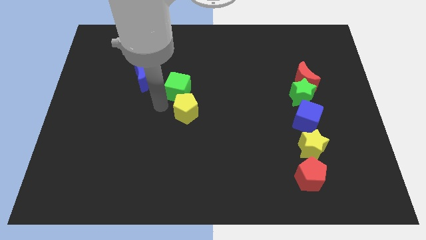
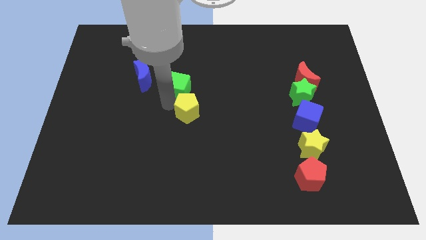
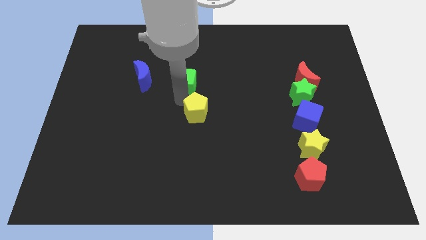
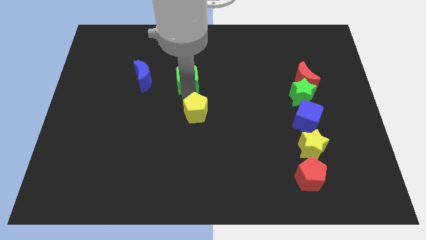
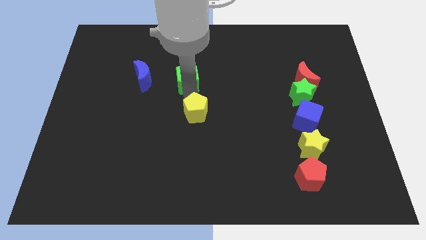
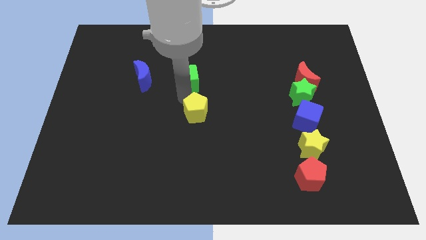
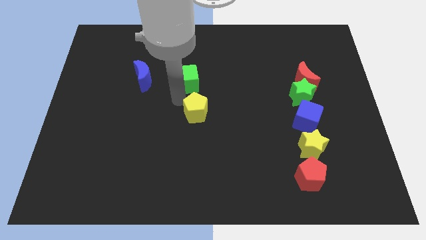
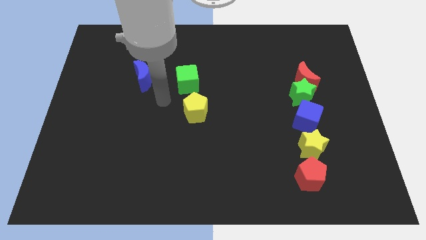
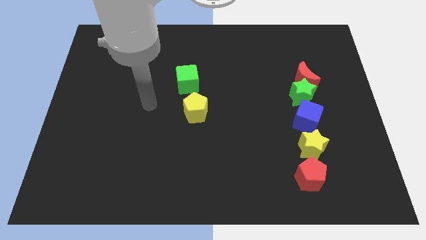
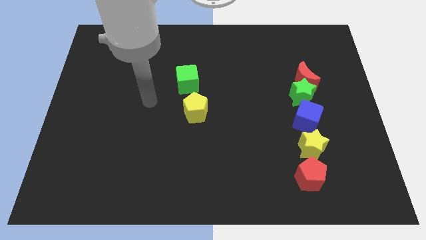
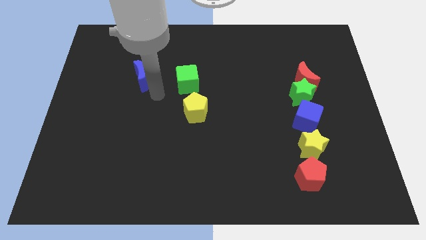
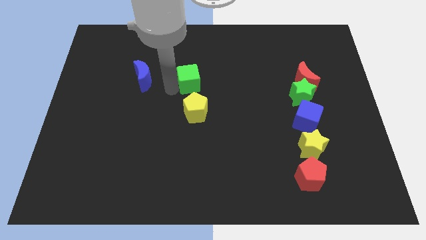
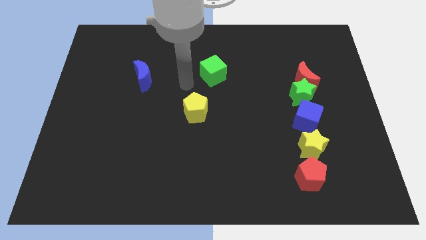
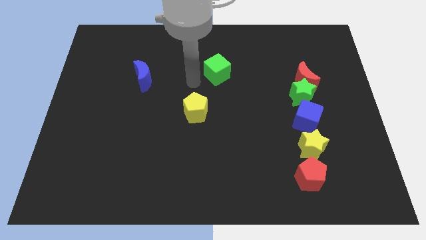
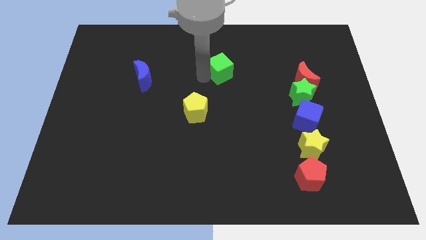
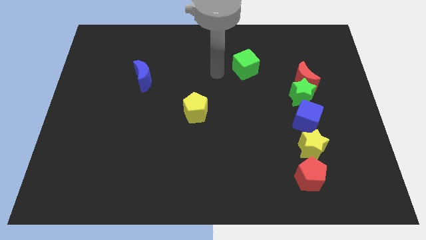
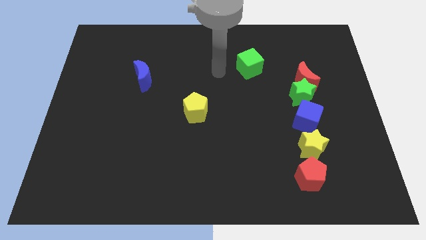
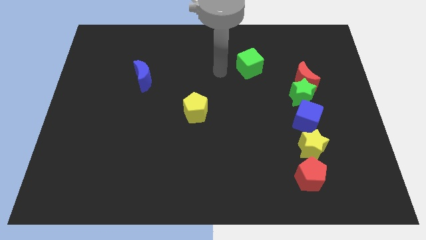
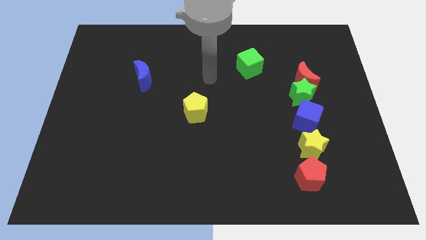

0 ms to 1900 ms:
separate the green cube from the yellow pentagon

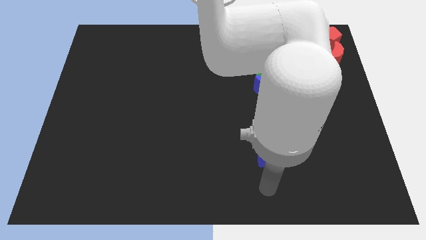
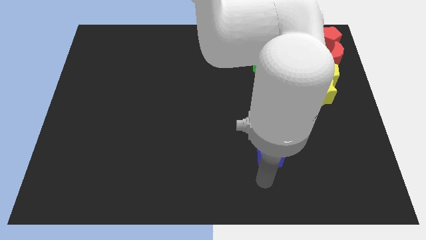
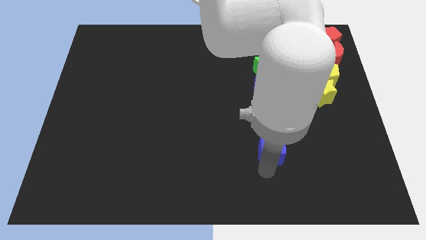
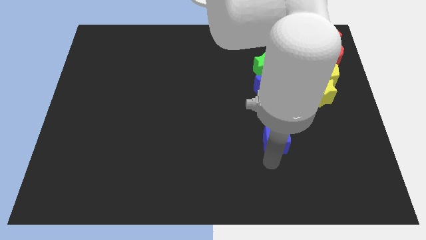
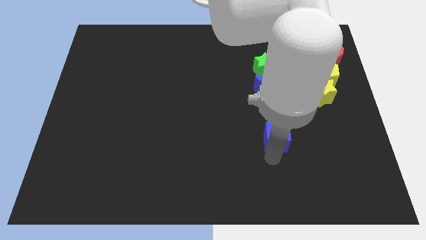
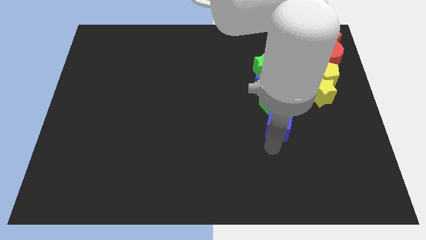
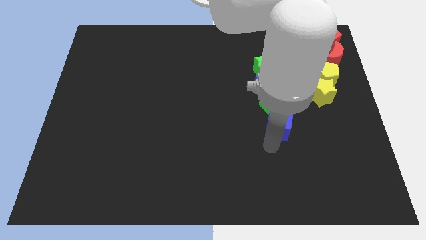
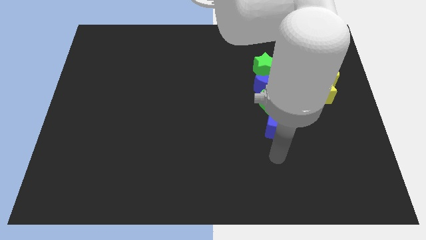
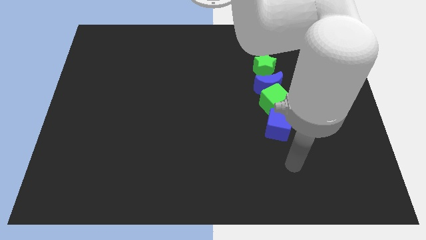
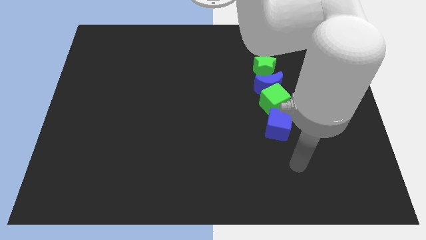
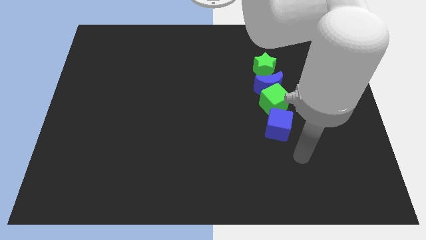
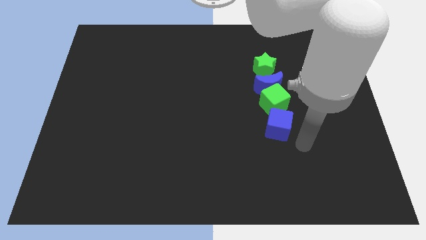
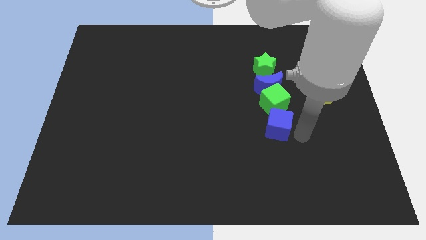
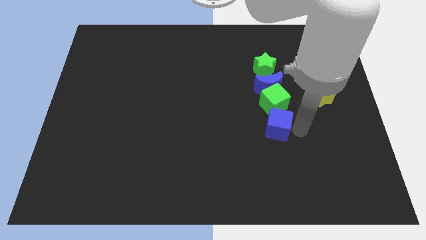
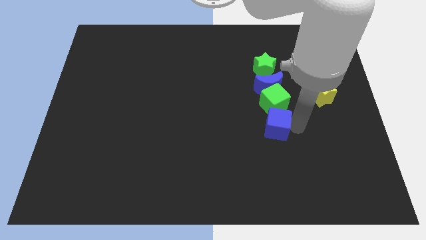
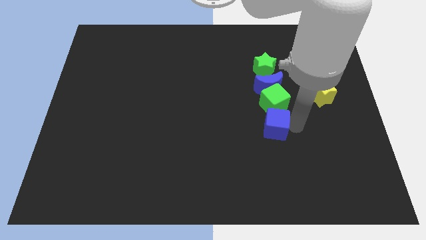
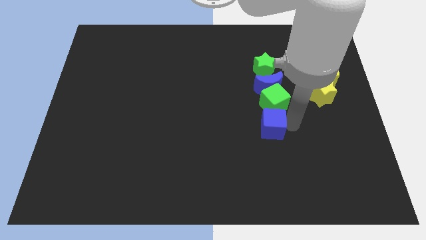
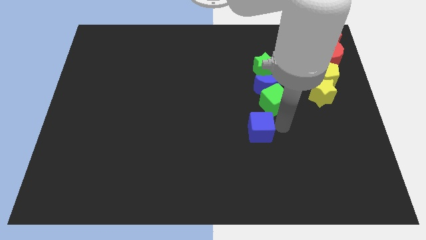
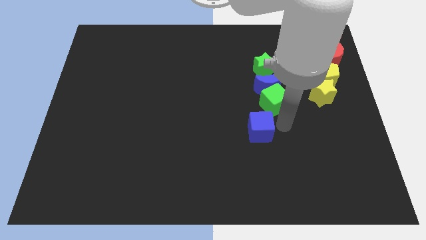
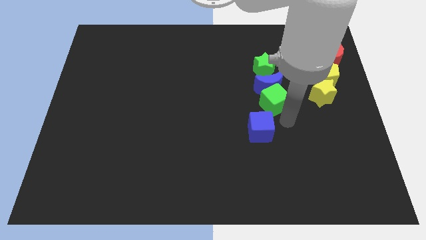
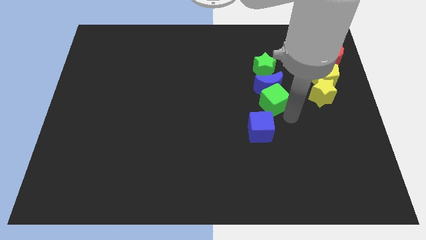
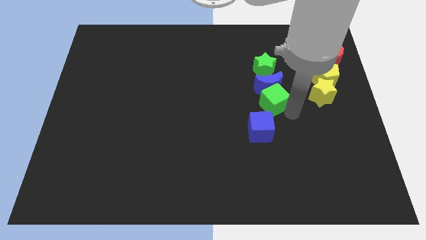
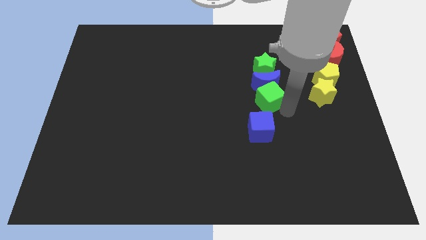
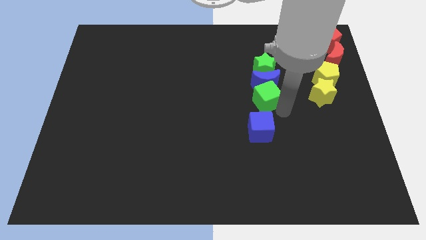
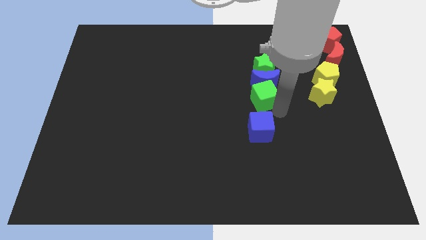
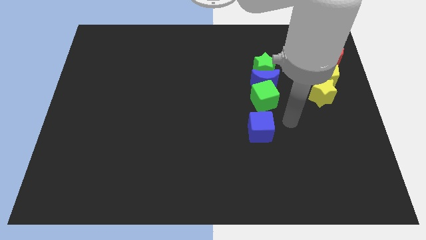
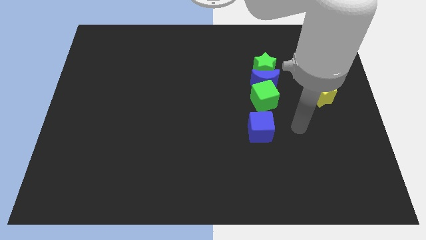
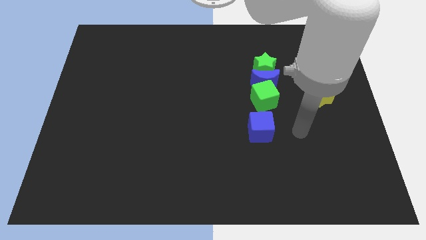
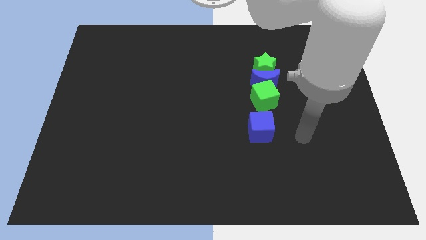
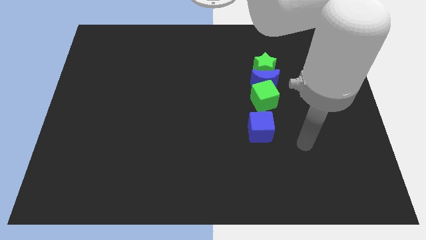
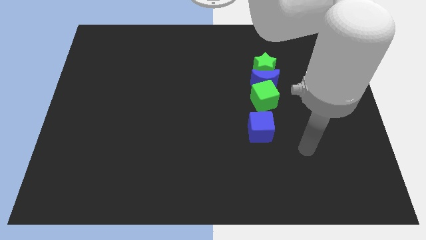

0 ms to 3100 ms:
place the blue cube below the green cube

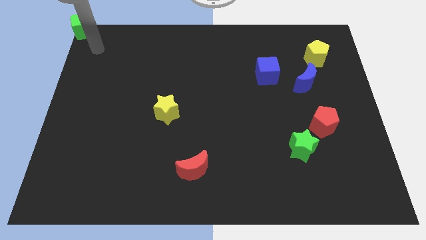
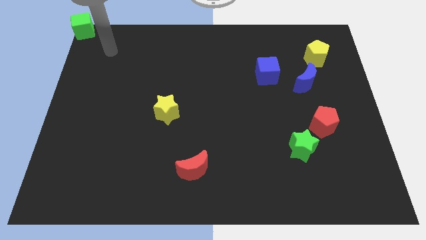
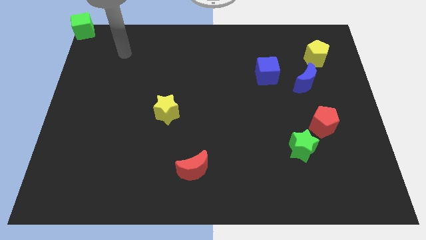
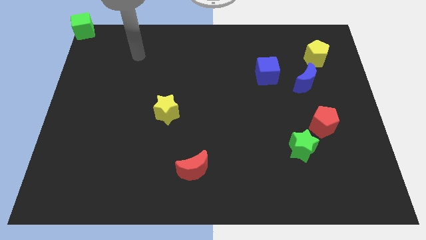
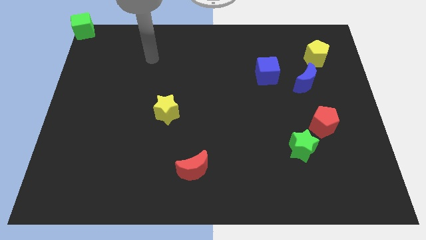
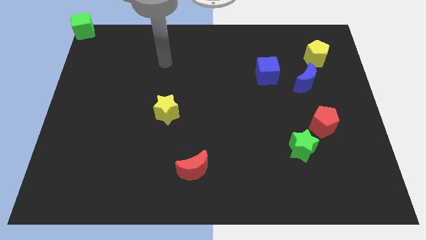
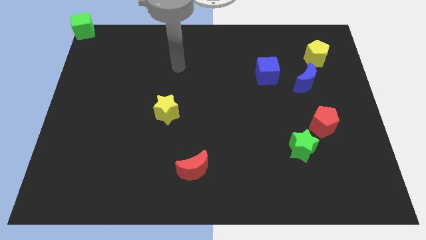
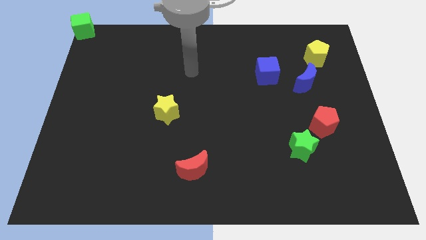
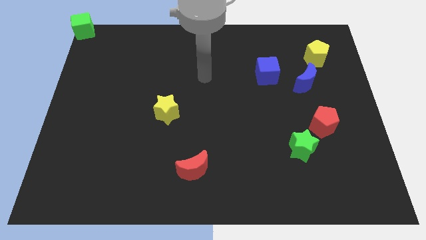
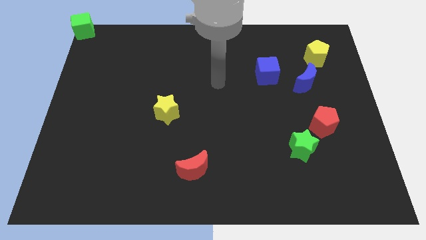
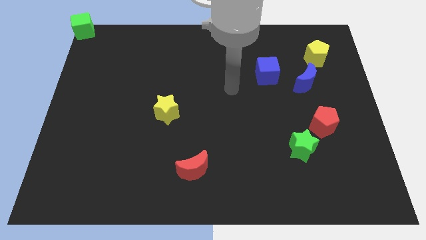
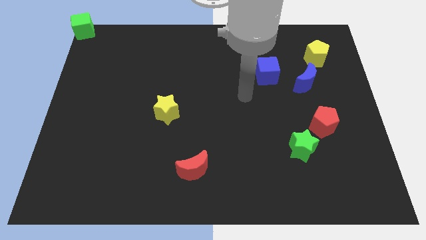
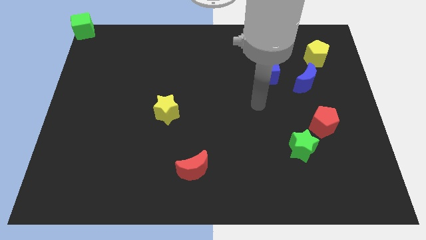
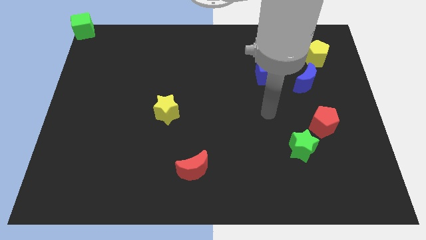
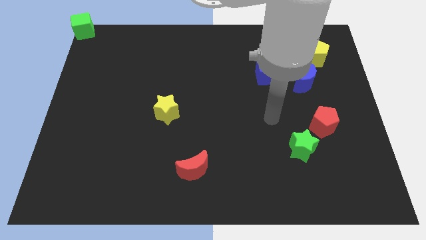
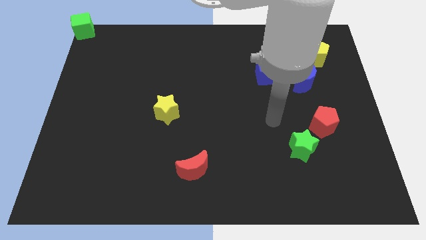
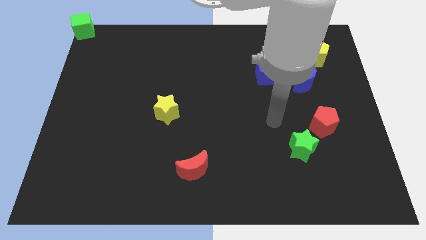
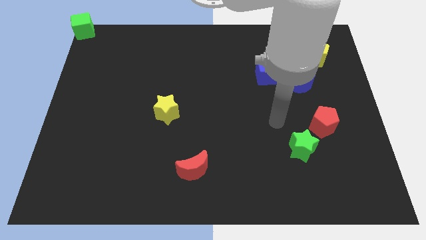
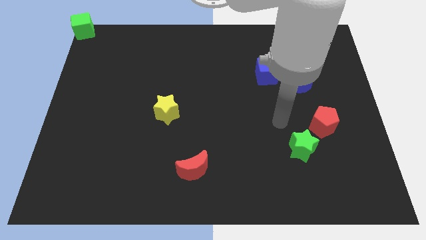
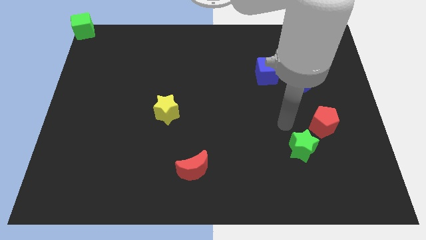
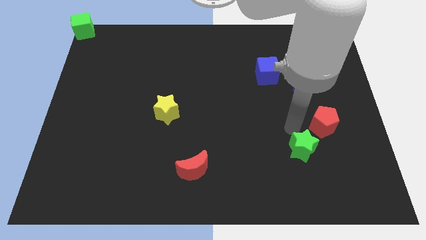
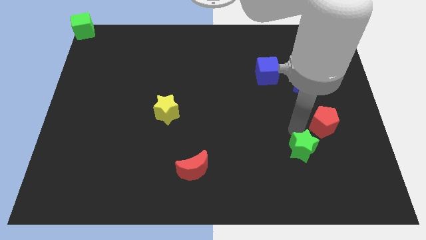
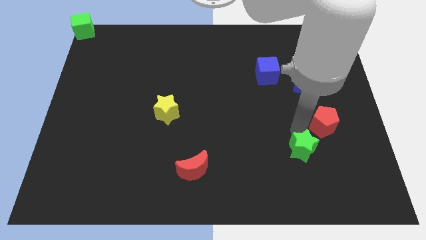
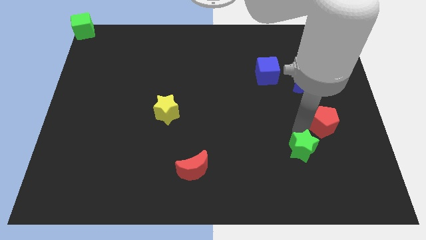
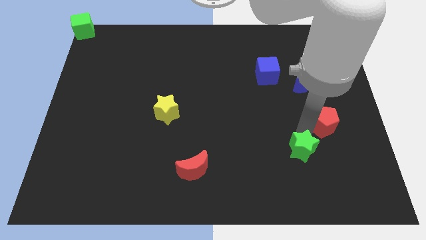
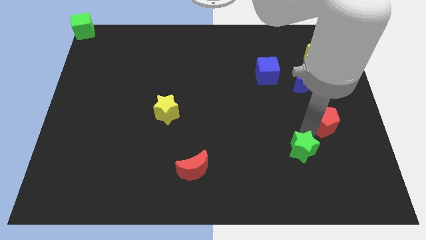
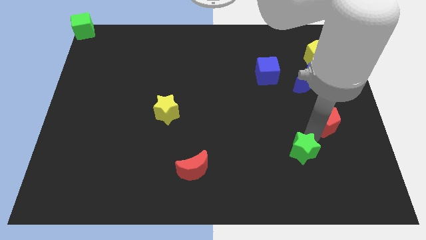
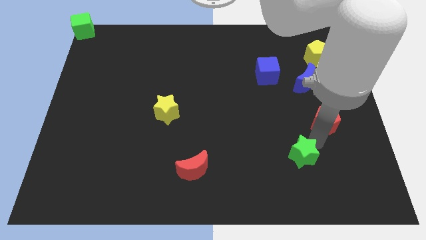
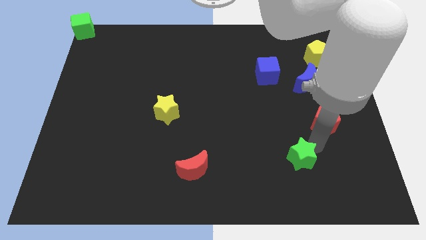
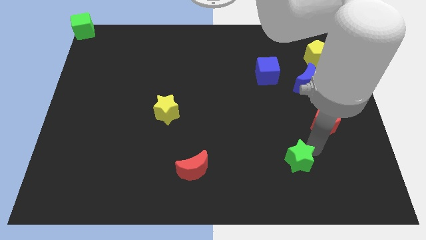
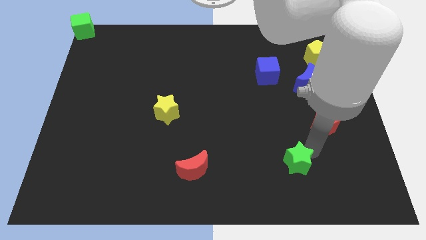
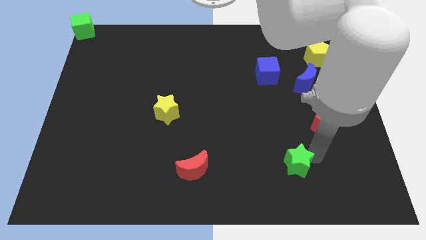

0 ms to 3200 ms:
drag the green star slightly to the down

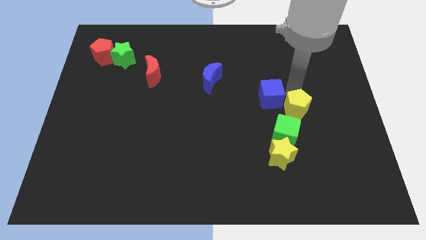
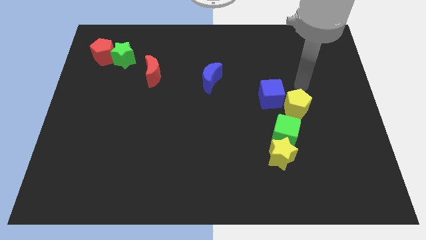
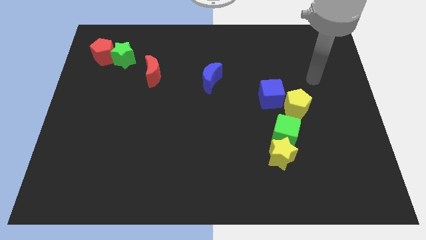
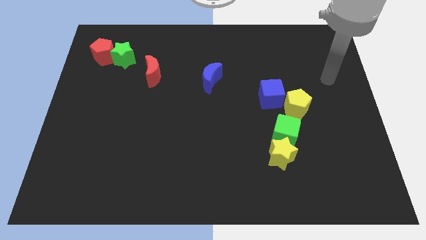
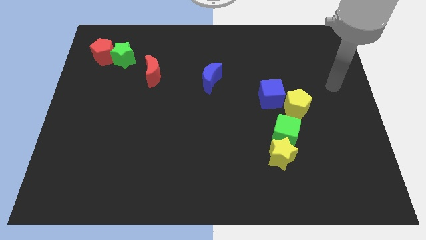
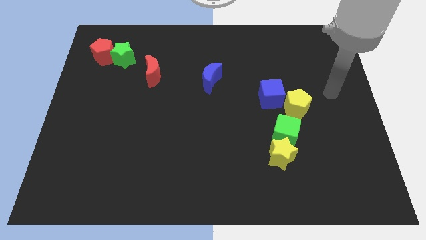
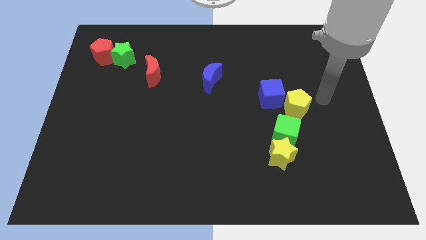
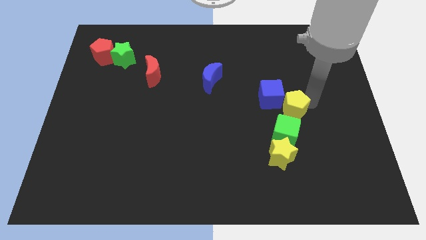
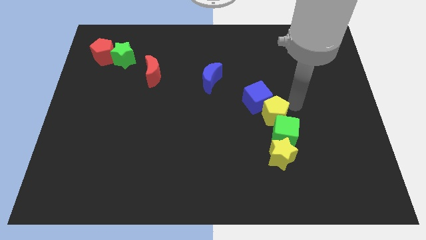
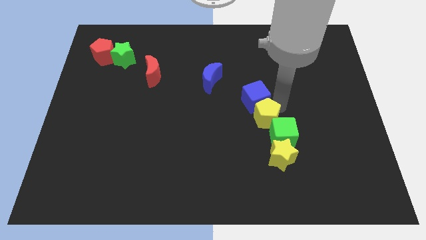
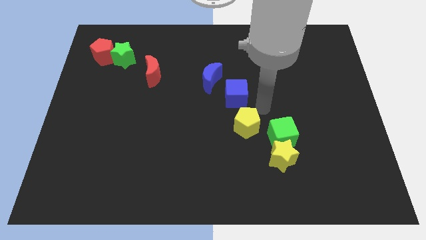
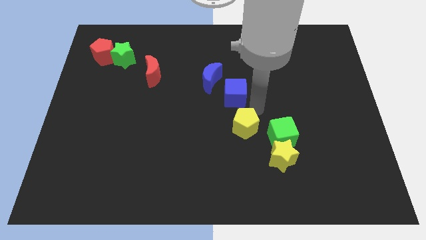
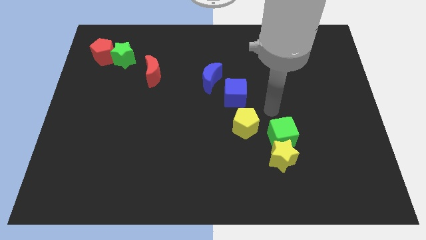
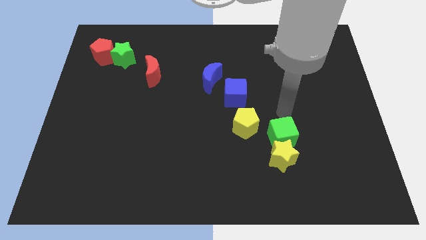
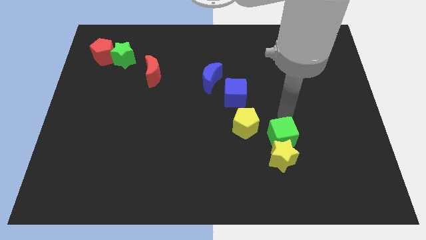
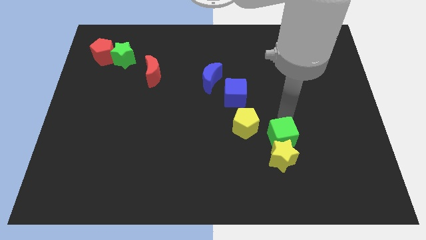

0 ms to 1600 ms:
slide the blue cube and the yellow pentagon to the left
